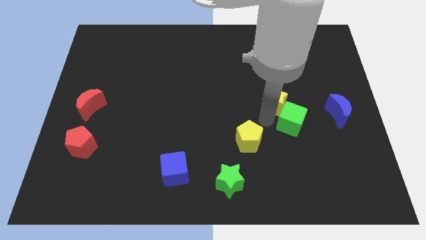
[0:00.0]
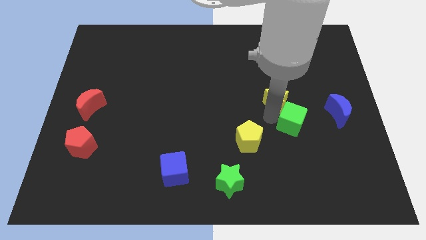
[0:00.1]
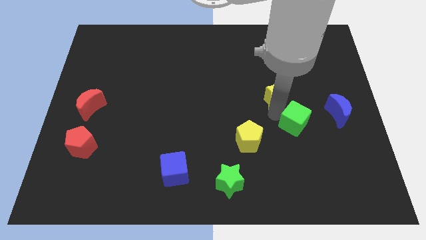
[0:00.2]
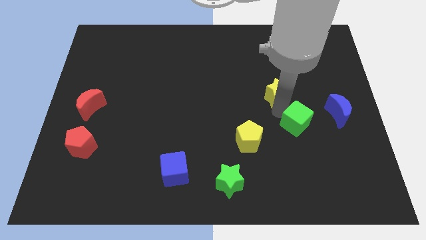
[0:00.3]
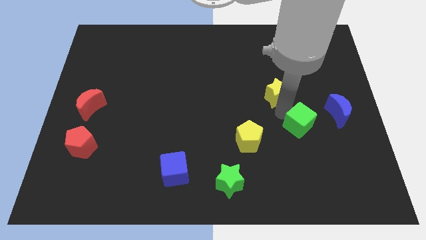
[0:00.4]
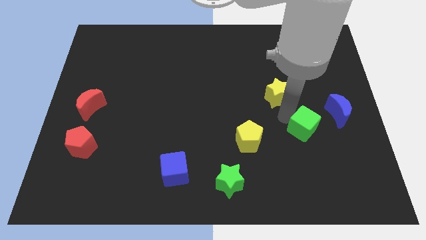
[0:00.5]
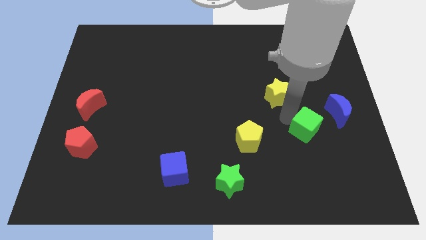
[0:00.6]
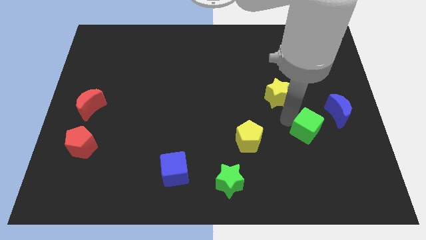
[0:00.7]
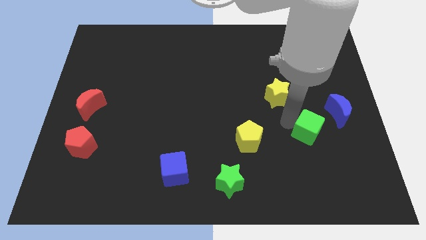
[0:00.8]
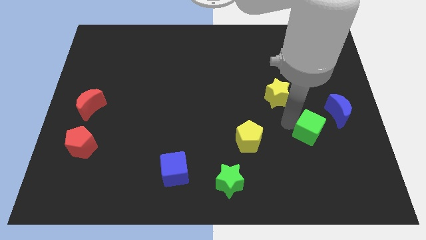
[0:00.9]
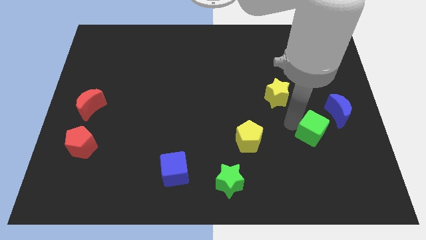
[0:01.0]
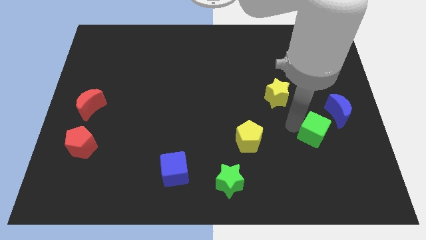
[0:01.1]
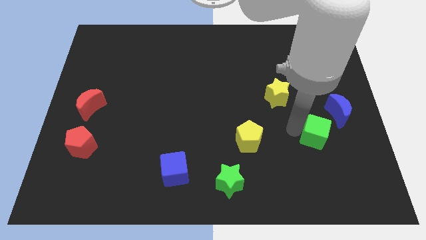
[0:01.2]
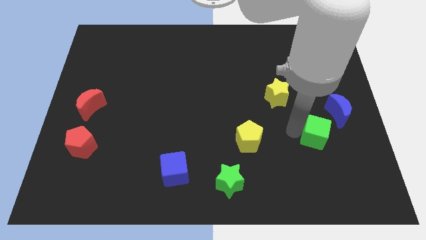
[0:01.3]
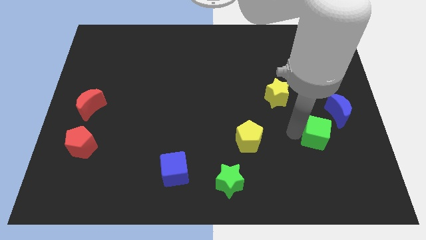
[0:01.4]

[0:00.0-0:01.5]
push yellow star and green cube apart

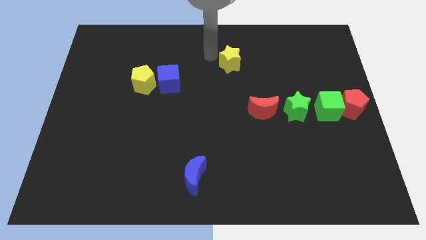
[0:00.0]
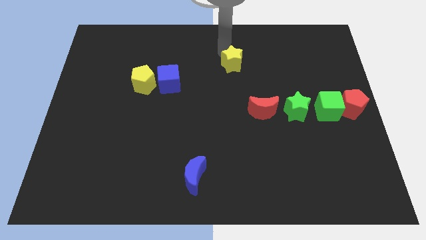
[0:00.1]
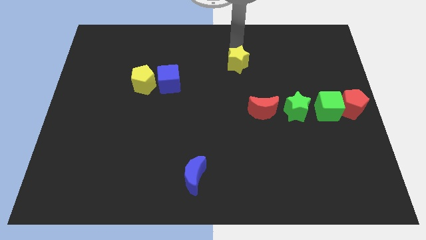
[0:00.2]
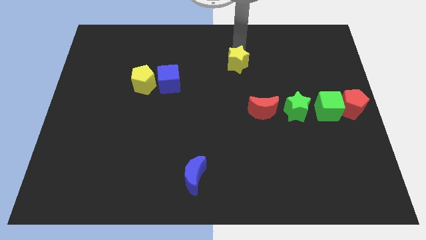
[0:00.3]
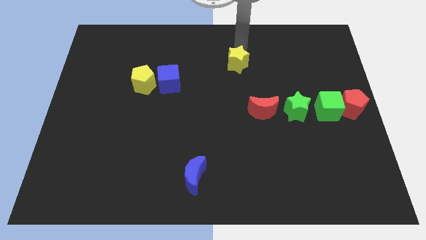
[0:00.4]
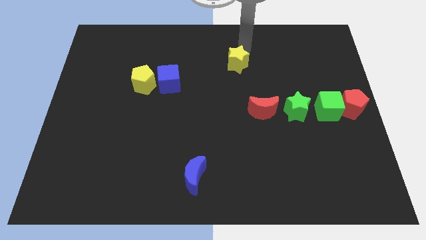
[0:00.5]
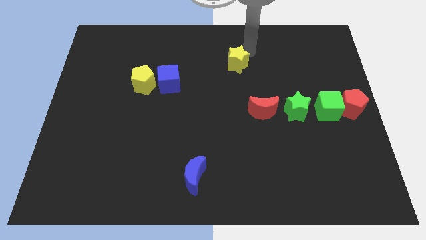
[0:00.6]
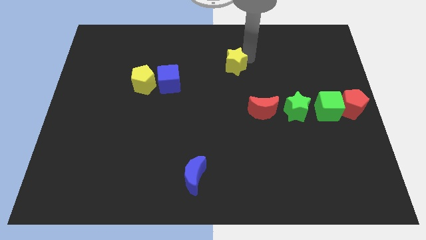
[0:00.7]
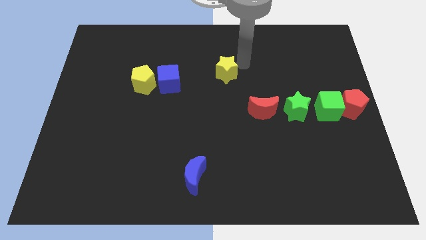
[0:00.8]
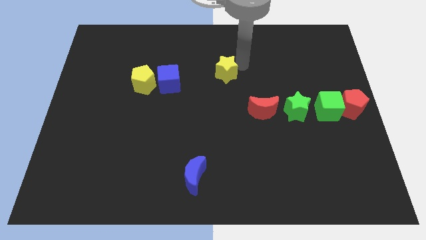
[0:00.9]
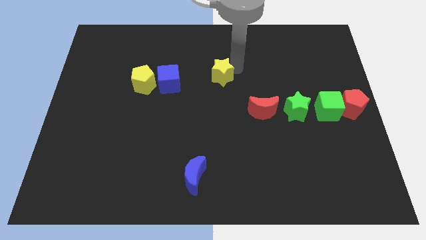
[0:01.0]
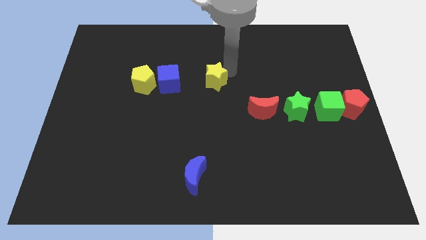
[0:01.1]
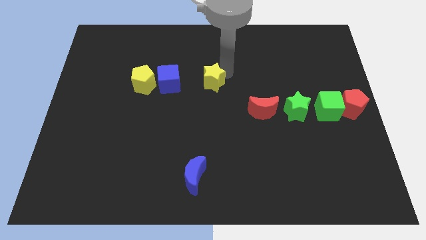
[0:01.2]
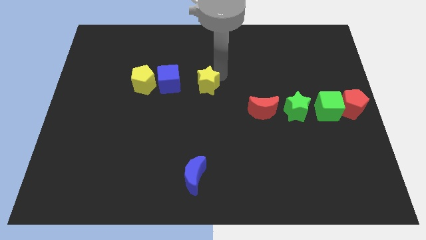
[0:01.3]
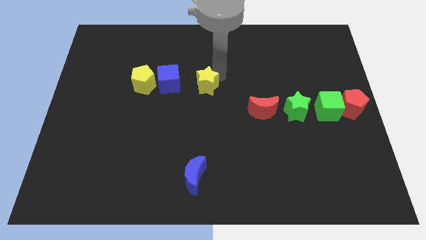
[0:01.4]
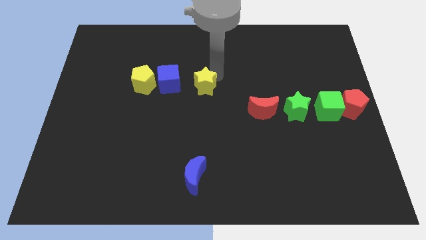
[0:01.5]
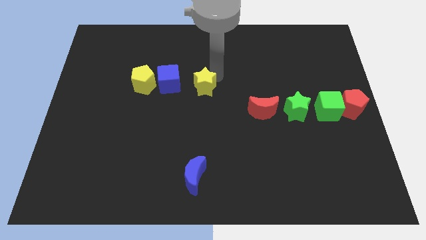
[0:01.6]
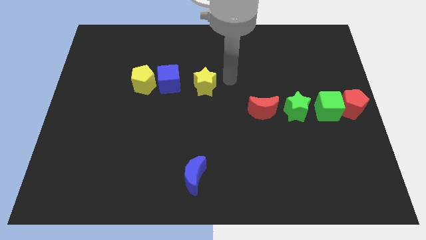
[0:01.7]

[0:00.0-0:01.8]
put the yellow star right to the blue cube

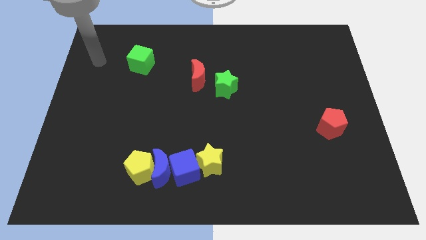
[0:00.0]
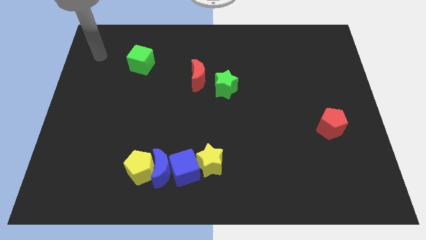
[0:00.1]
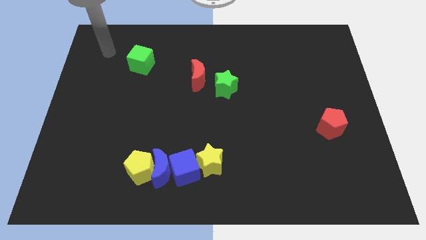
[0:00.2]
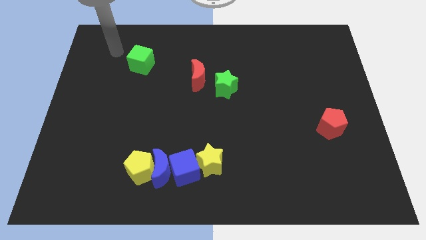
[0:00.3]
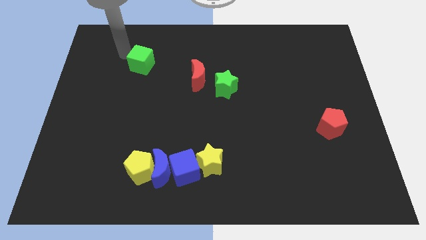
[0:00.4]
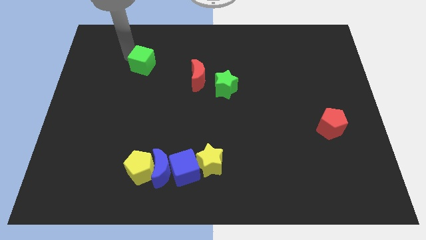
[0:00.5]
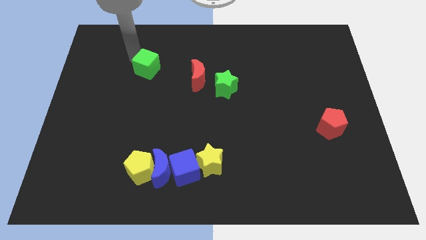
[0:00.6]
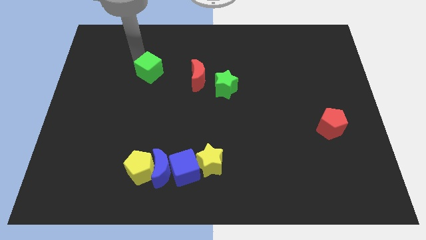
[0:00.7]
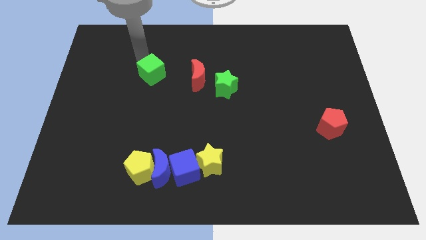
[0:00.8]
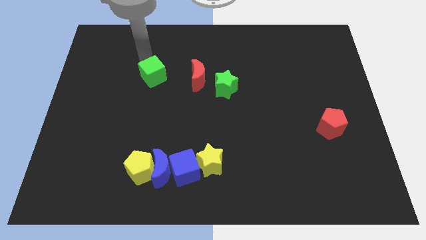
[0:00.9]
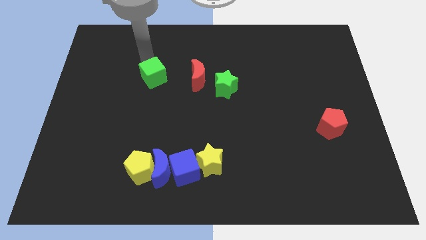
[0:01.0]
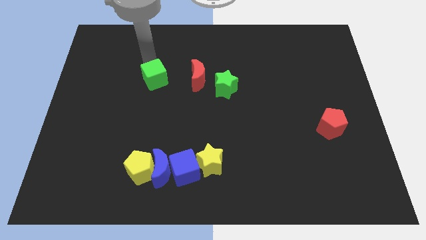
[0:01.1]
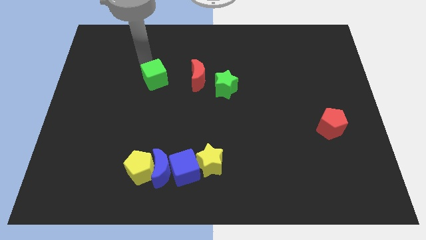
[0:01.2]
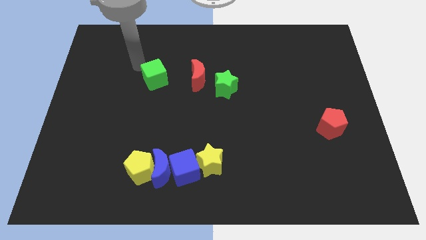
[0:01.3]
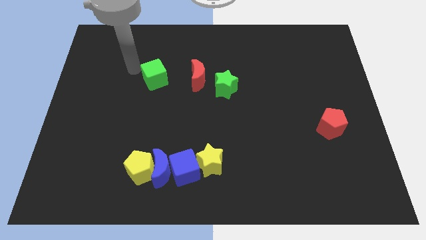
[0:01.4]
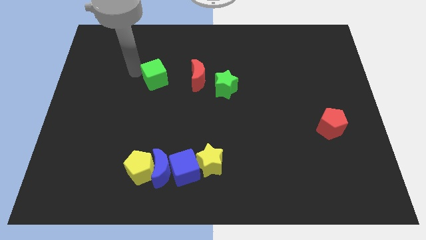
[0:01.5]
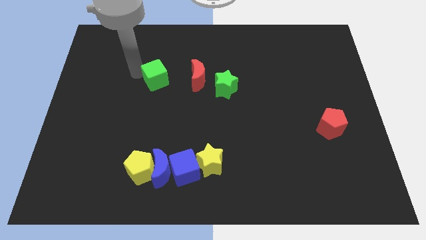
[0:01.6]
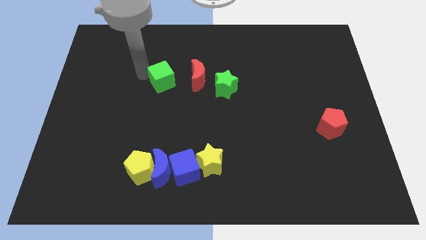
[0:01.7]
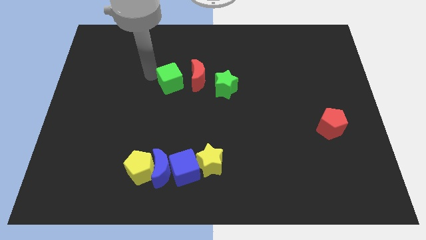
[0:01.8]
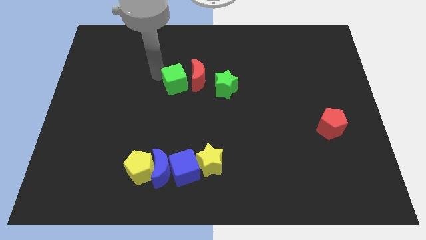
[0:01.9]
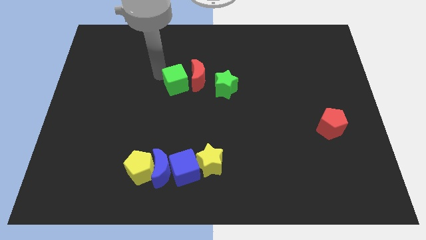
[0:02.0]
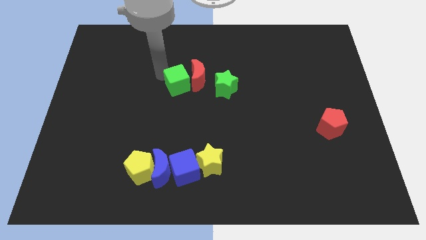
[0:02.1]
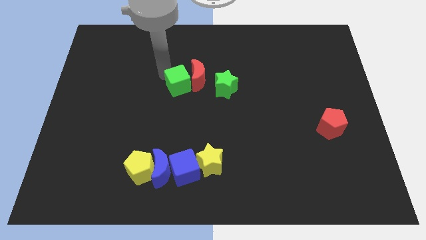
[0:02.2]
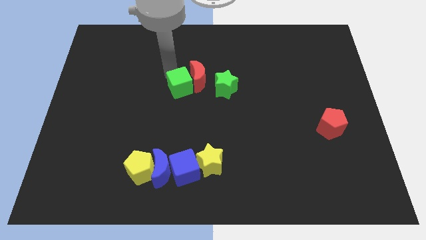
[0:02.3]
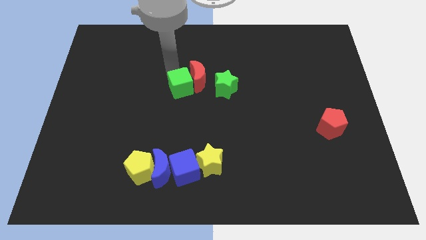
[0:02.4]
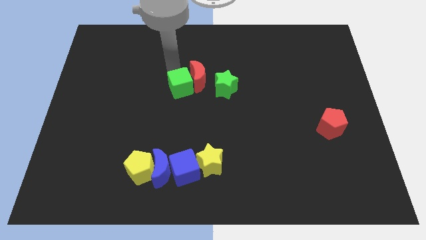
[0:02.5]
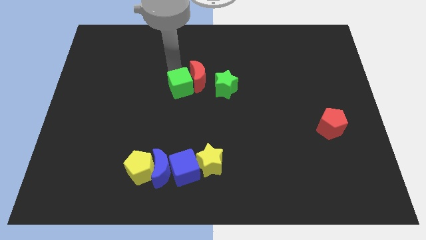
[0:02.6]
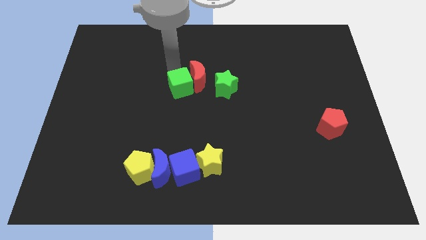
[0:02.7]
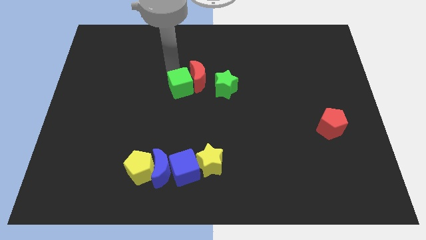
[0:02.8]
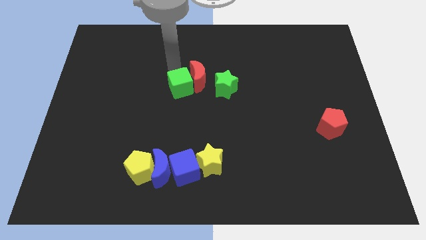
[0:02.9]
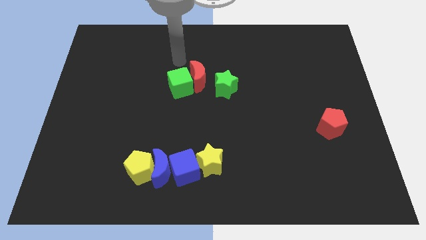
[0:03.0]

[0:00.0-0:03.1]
move green cube close to the red moon

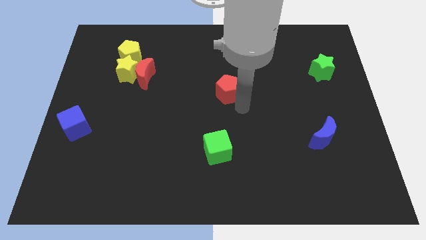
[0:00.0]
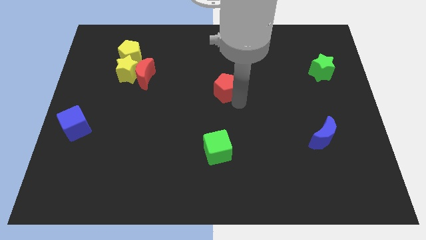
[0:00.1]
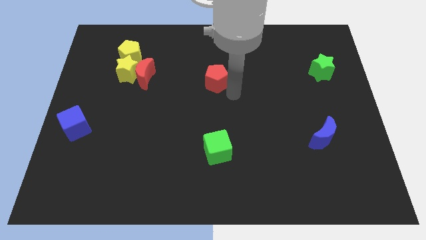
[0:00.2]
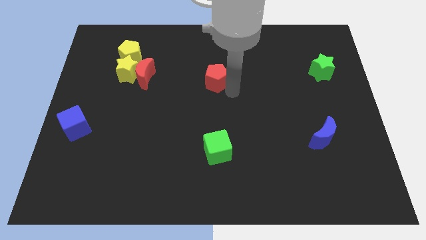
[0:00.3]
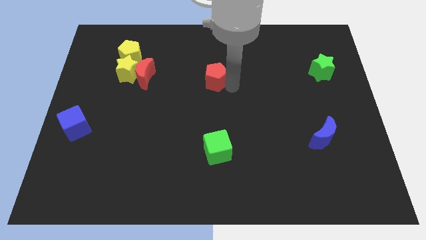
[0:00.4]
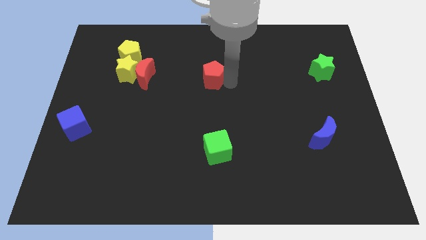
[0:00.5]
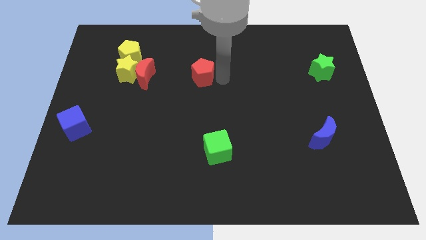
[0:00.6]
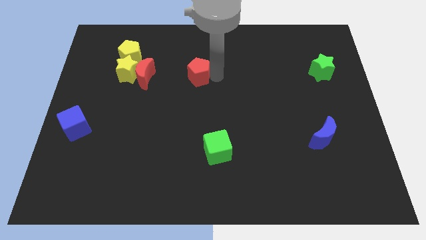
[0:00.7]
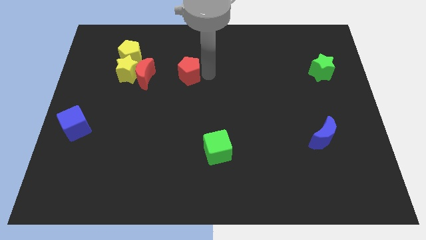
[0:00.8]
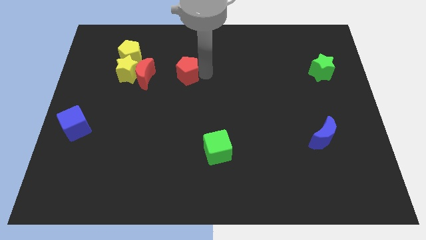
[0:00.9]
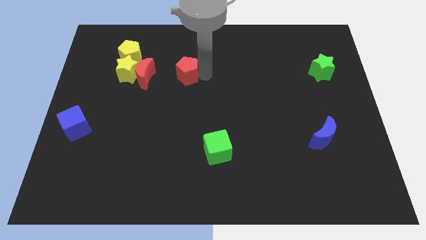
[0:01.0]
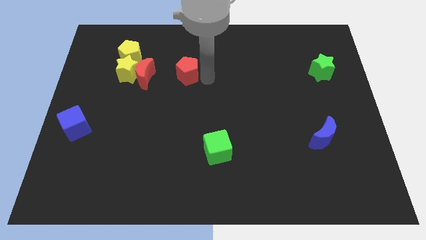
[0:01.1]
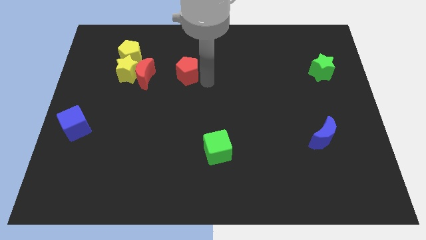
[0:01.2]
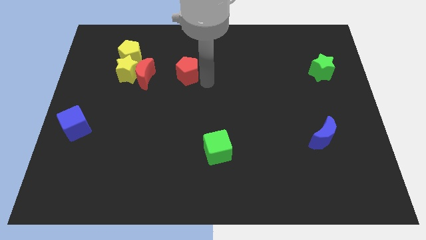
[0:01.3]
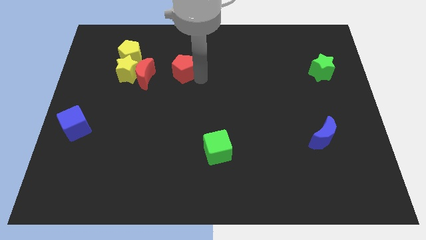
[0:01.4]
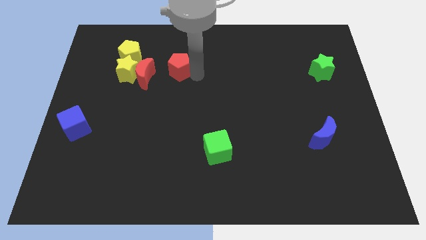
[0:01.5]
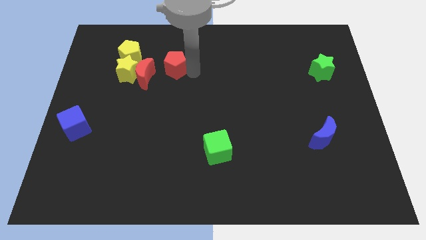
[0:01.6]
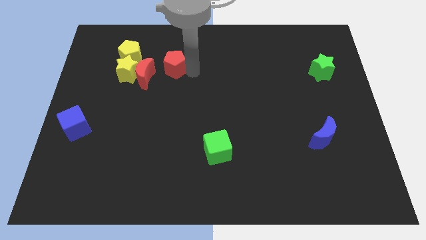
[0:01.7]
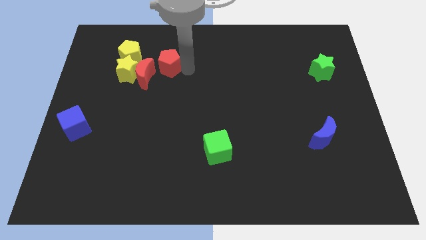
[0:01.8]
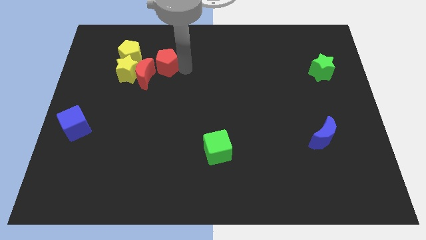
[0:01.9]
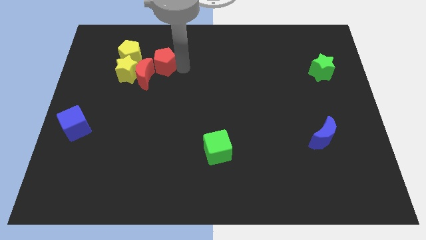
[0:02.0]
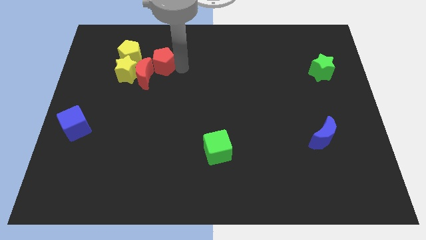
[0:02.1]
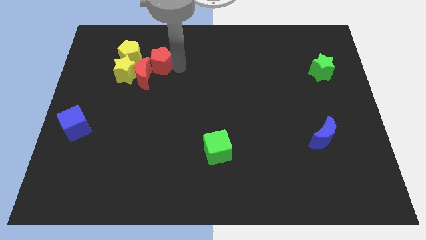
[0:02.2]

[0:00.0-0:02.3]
move the red pentagon into the red moon

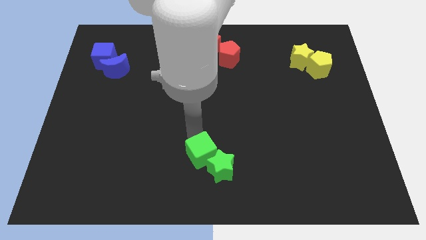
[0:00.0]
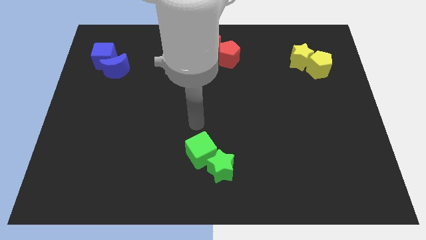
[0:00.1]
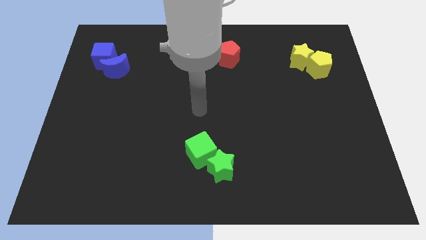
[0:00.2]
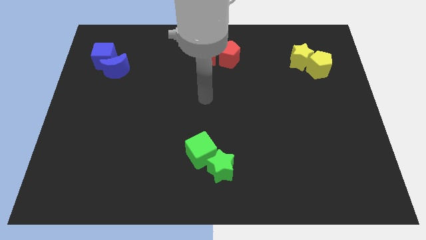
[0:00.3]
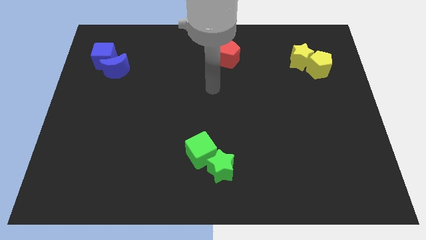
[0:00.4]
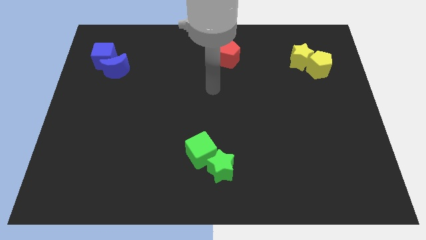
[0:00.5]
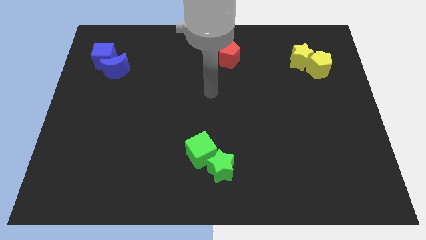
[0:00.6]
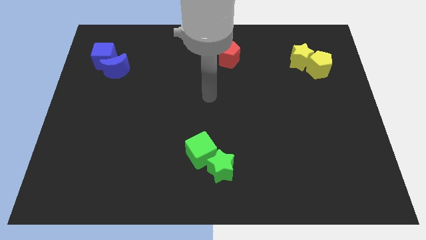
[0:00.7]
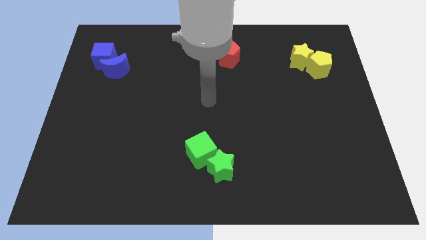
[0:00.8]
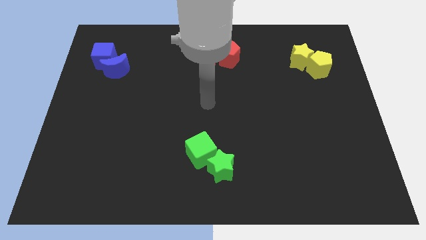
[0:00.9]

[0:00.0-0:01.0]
move your arm away from the green cube
